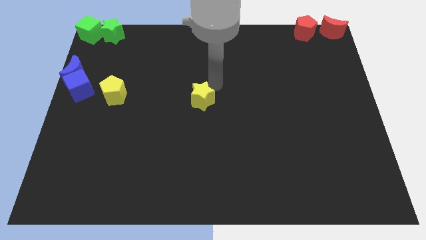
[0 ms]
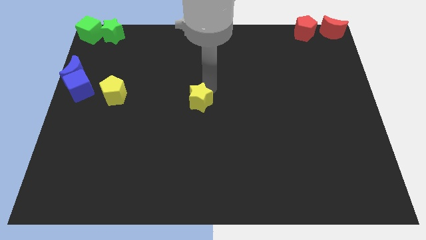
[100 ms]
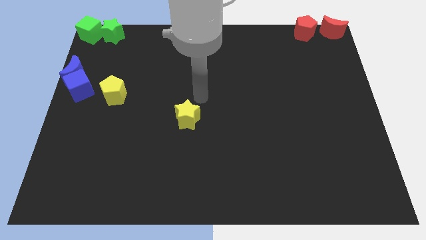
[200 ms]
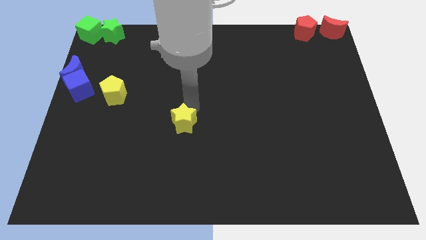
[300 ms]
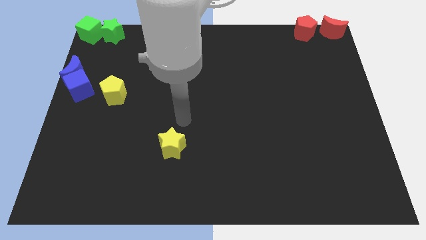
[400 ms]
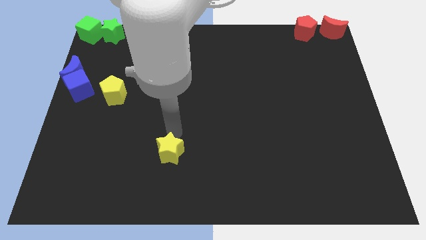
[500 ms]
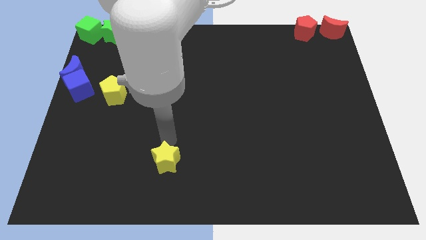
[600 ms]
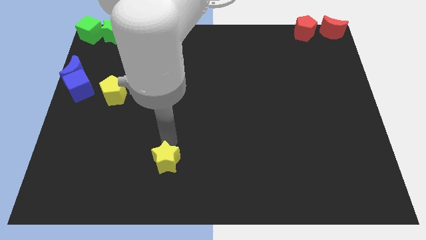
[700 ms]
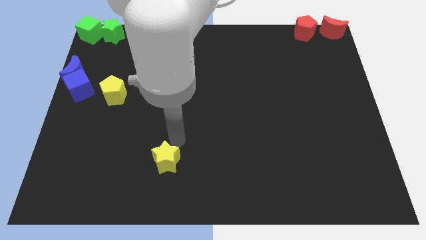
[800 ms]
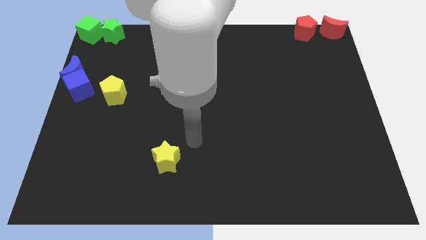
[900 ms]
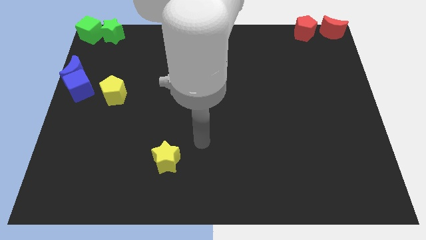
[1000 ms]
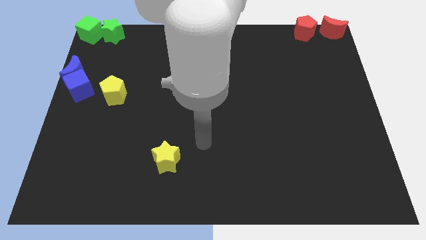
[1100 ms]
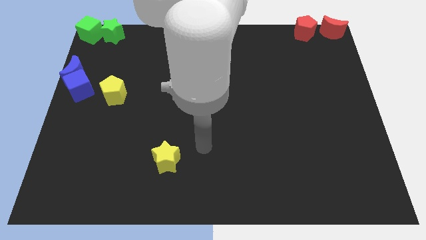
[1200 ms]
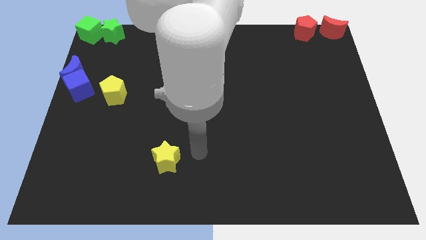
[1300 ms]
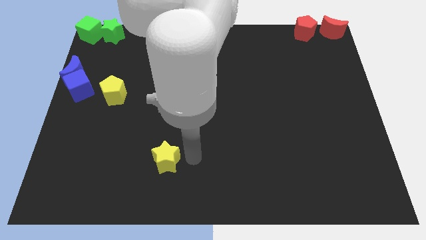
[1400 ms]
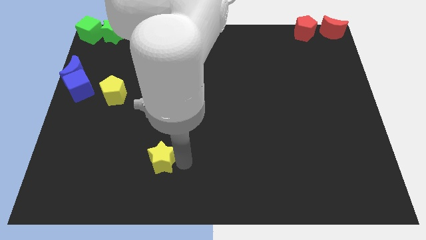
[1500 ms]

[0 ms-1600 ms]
push the yellow star downwards

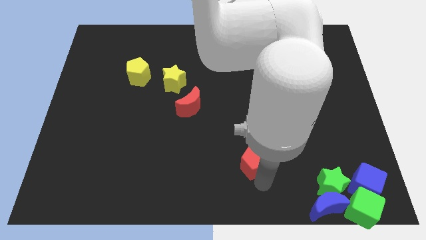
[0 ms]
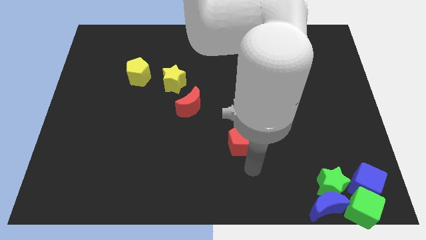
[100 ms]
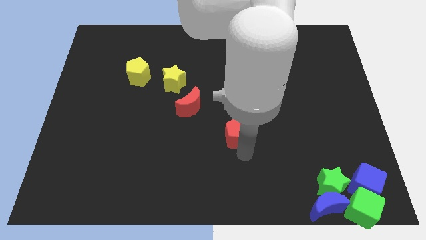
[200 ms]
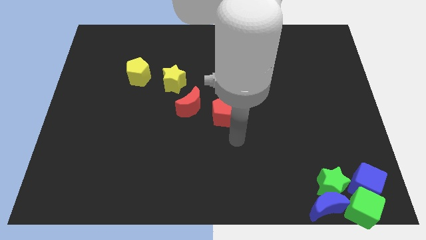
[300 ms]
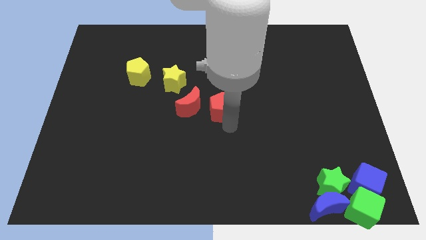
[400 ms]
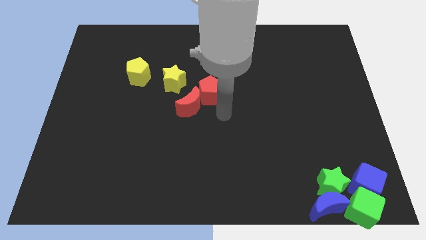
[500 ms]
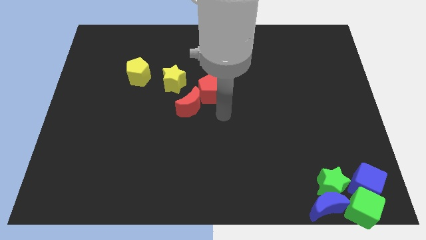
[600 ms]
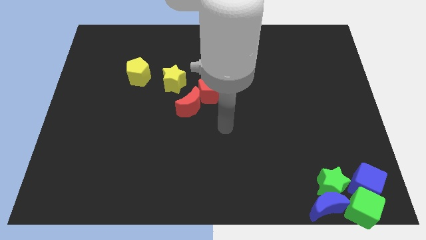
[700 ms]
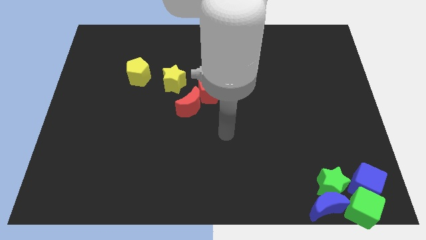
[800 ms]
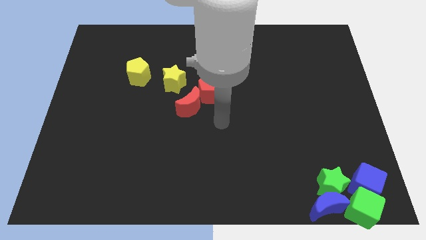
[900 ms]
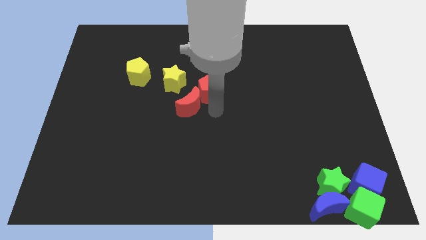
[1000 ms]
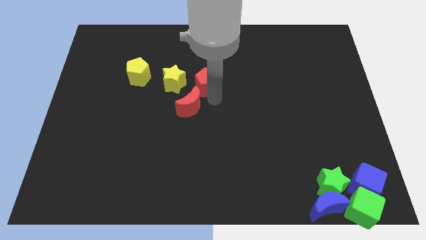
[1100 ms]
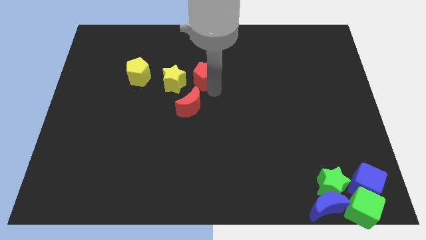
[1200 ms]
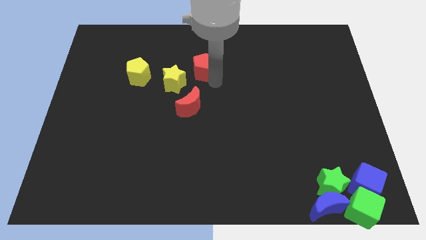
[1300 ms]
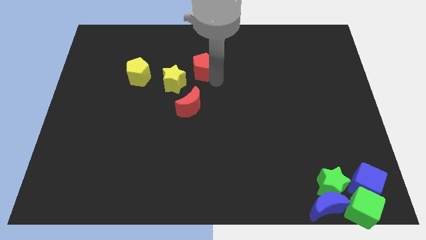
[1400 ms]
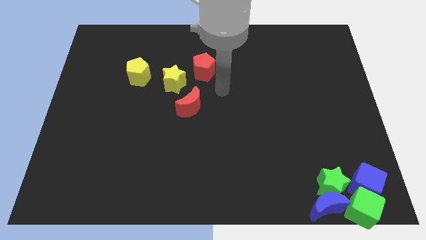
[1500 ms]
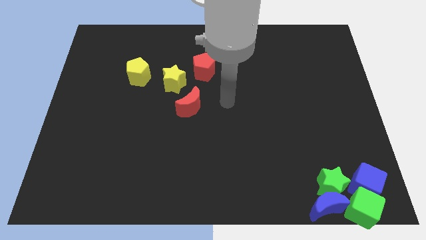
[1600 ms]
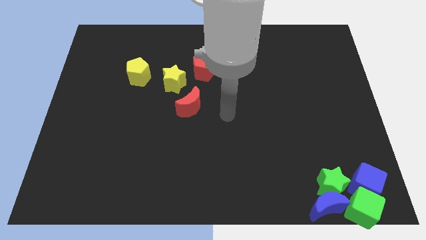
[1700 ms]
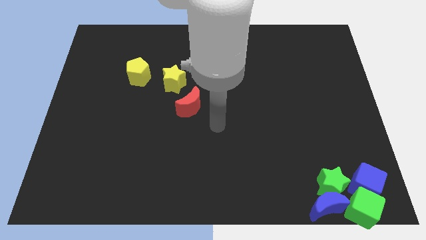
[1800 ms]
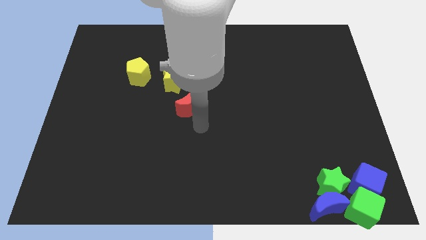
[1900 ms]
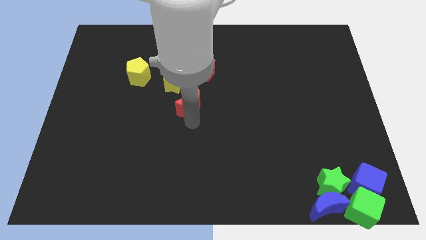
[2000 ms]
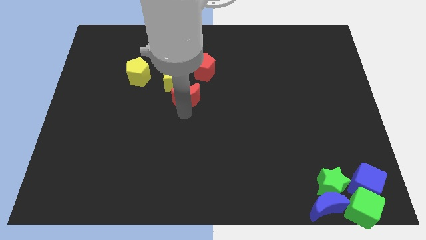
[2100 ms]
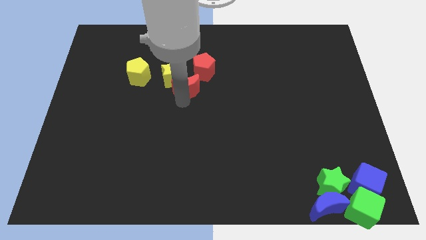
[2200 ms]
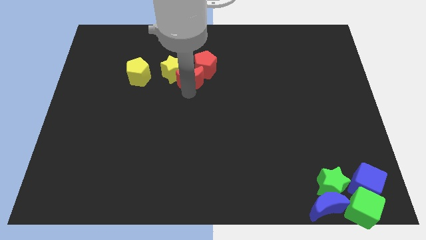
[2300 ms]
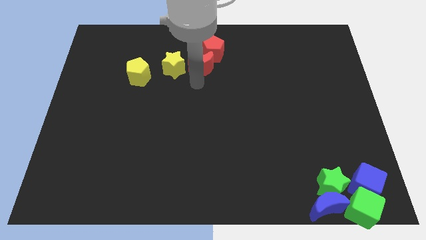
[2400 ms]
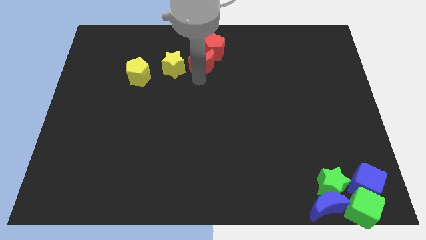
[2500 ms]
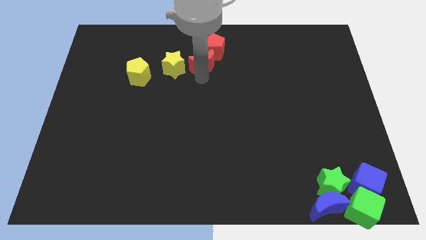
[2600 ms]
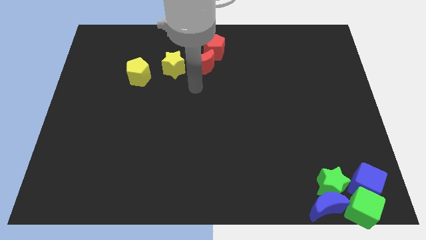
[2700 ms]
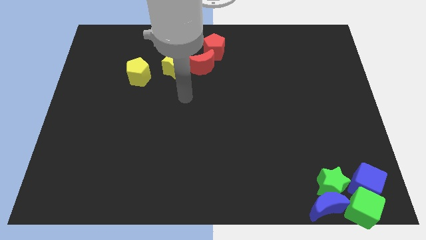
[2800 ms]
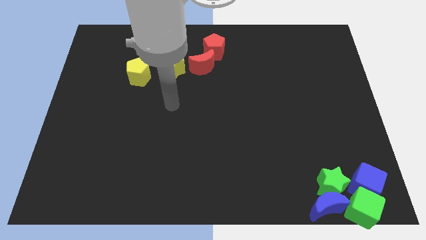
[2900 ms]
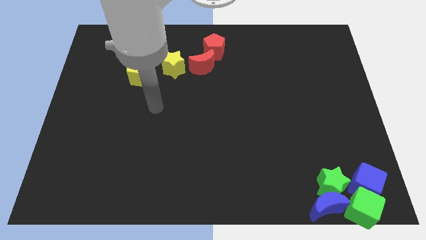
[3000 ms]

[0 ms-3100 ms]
move the red moon and the red pentagon towards top

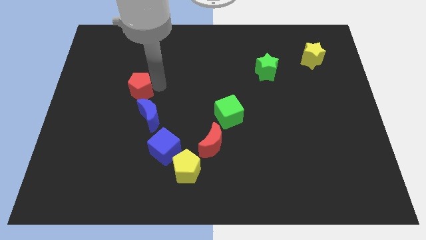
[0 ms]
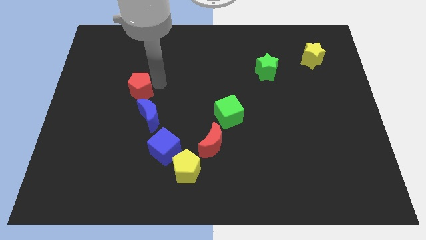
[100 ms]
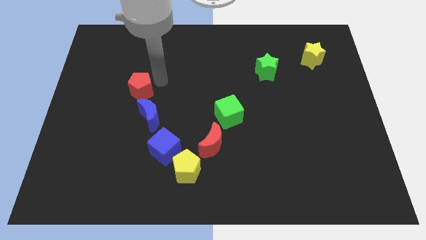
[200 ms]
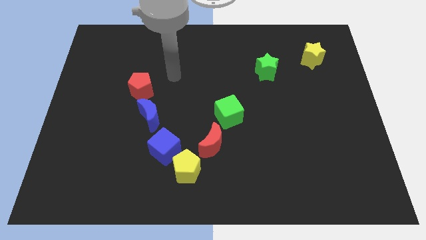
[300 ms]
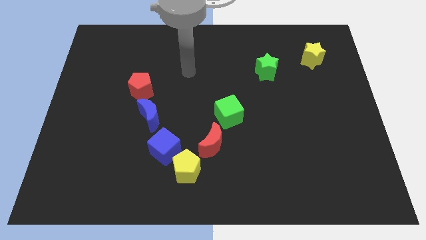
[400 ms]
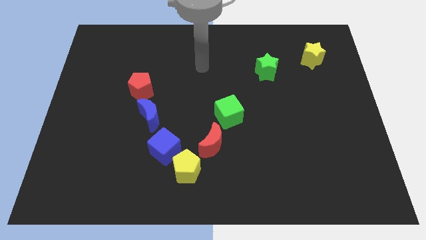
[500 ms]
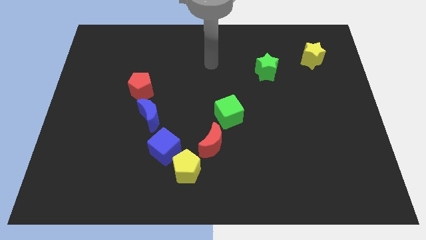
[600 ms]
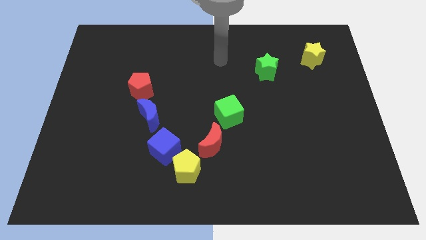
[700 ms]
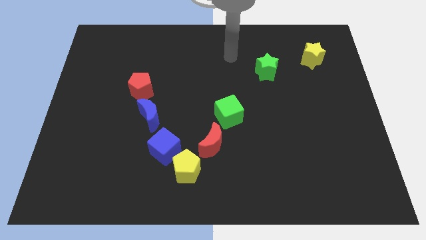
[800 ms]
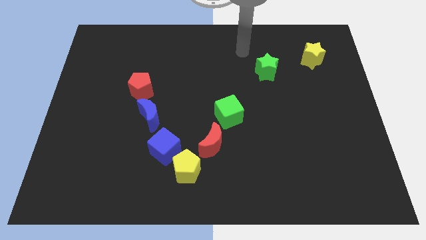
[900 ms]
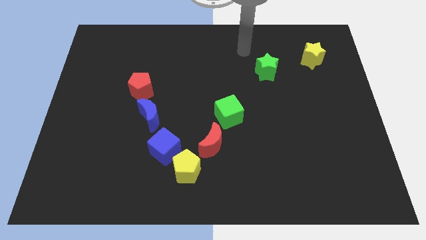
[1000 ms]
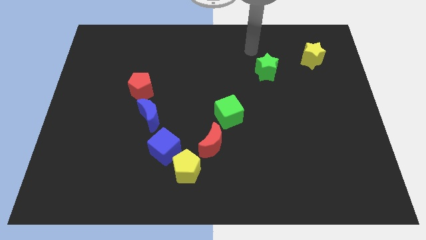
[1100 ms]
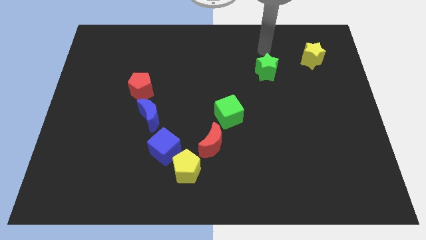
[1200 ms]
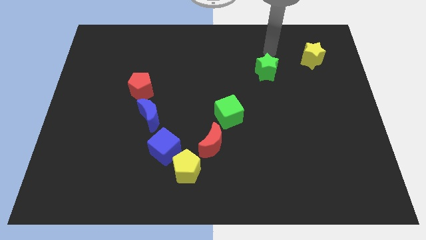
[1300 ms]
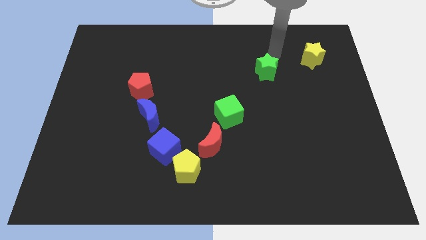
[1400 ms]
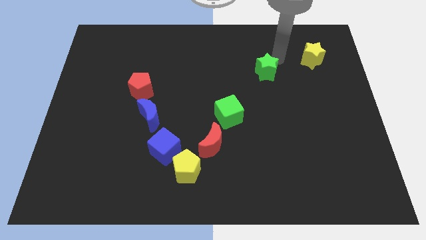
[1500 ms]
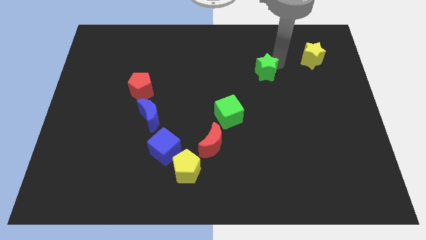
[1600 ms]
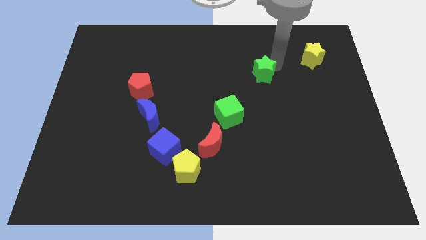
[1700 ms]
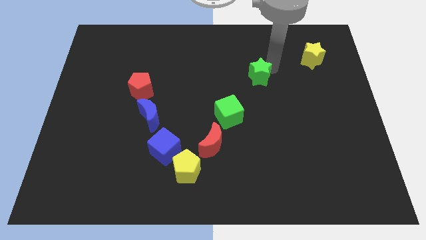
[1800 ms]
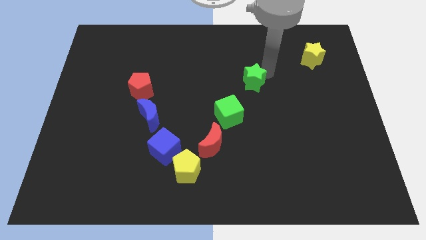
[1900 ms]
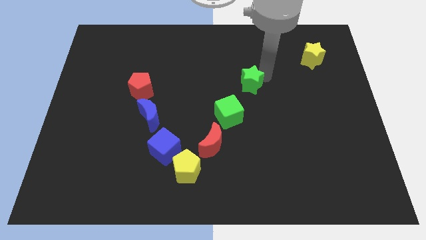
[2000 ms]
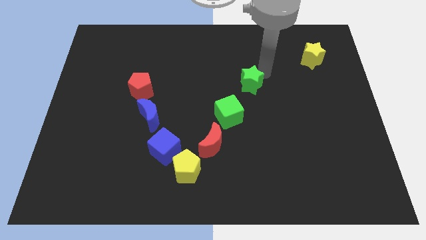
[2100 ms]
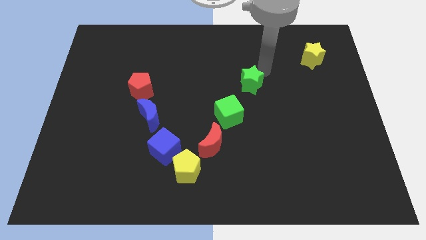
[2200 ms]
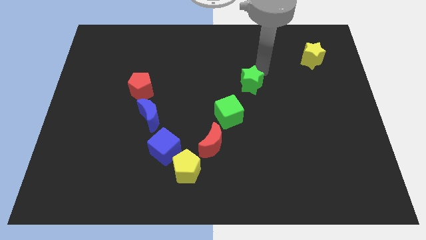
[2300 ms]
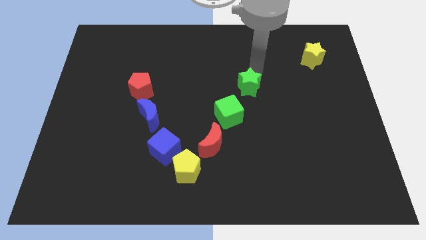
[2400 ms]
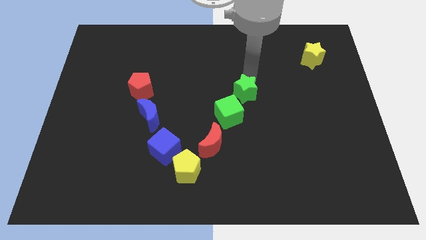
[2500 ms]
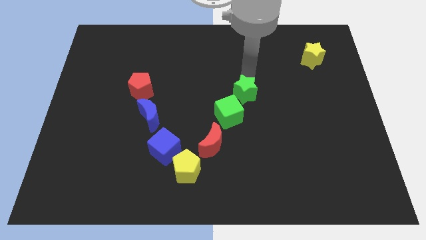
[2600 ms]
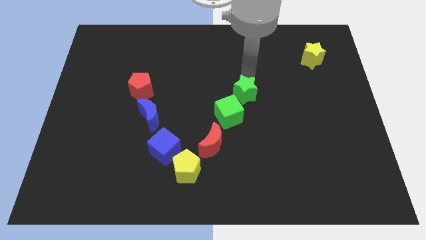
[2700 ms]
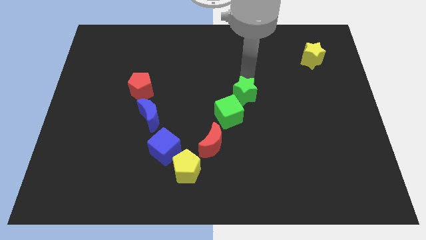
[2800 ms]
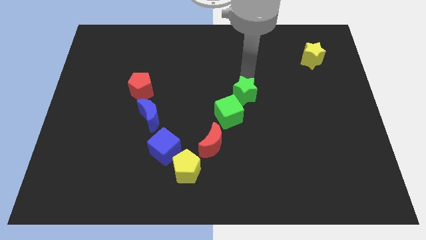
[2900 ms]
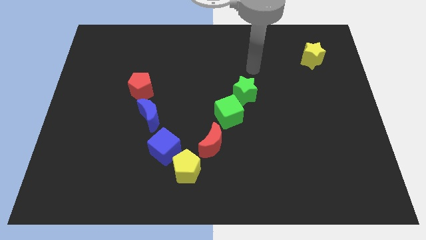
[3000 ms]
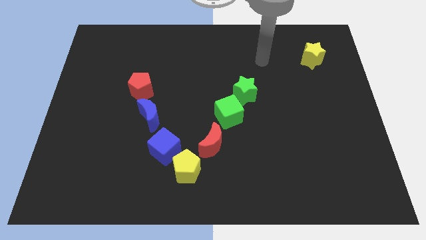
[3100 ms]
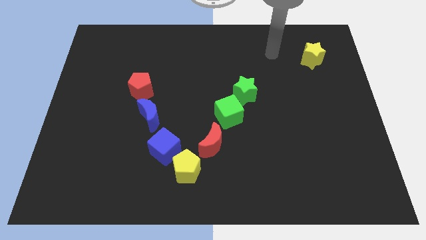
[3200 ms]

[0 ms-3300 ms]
move the green star diagonally to the green cube

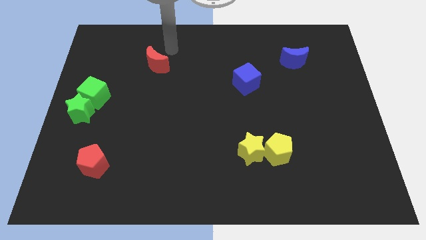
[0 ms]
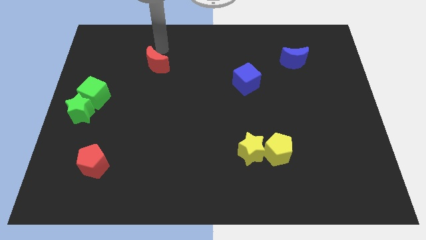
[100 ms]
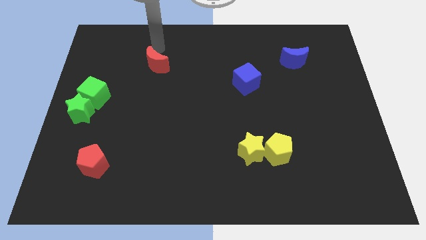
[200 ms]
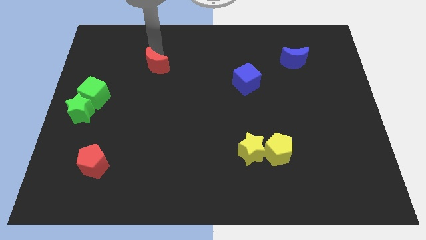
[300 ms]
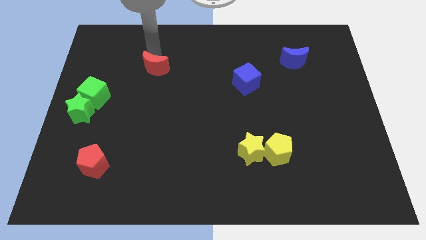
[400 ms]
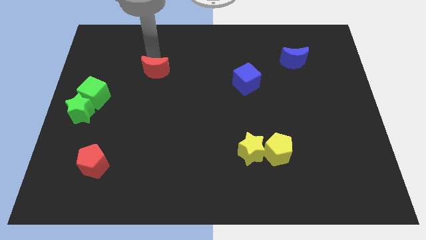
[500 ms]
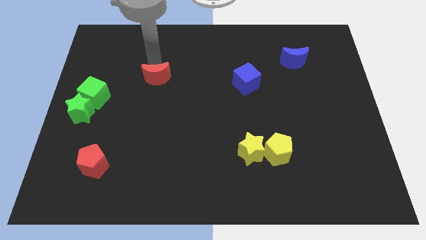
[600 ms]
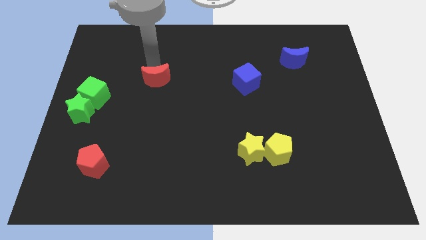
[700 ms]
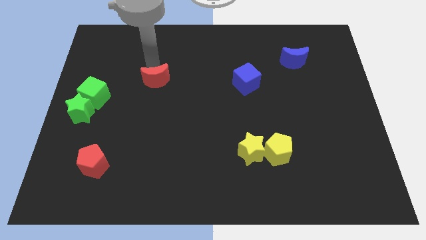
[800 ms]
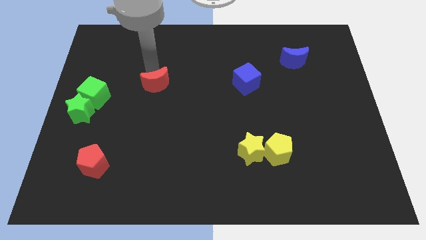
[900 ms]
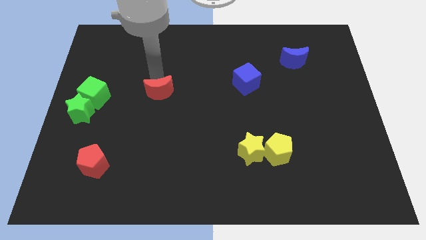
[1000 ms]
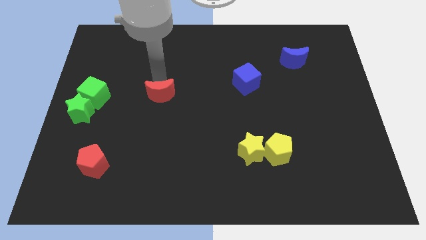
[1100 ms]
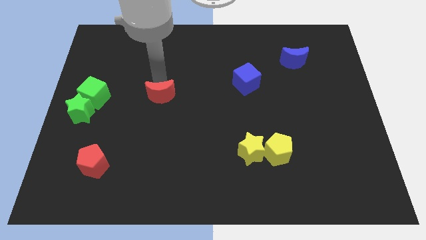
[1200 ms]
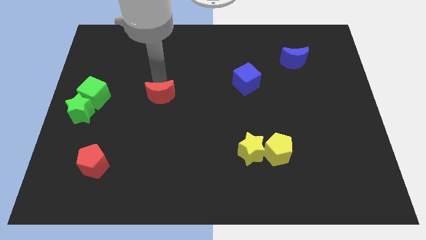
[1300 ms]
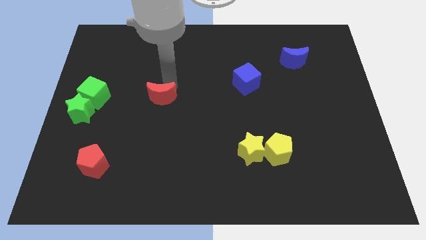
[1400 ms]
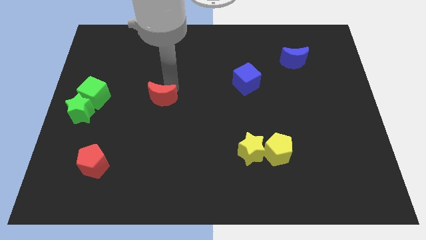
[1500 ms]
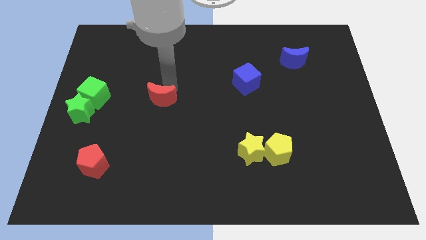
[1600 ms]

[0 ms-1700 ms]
move the red moon towards the bottom
